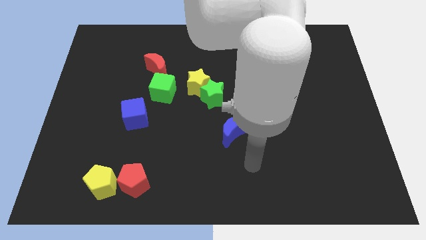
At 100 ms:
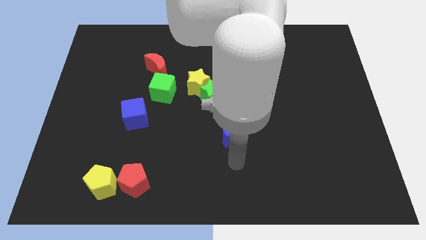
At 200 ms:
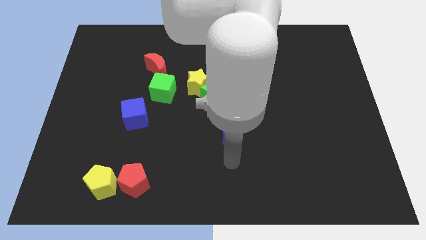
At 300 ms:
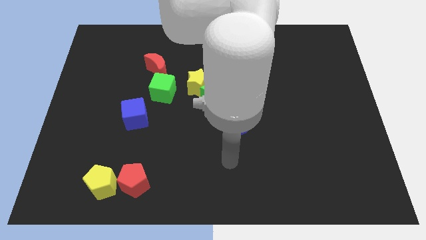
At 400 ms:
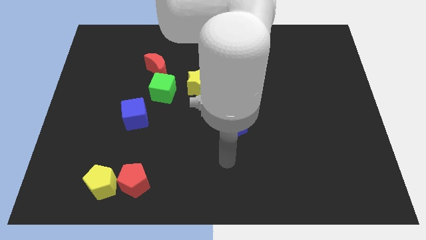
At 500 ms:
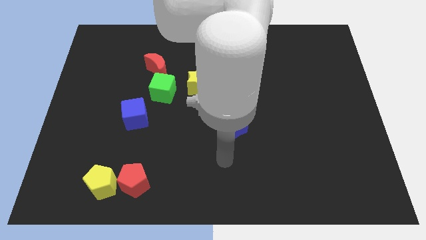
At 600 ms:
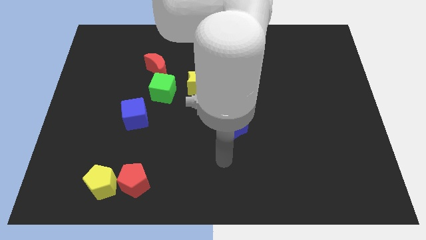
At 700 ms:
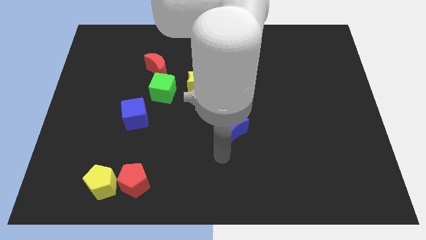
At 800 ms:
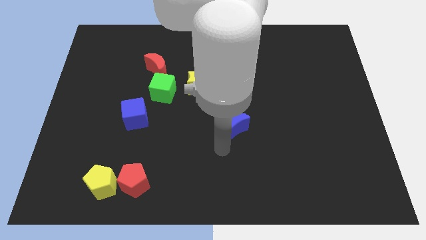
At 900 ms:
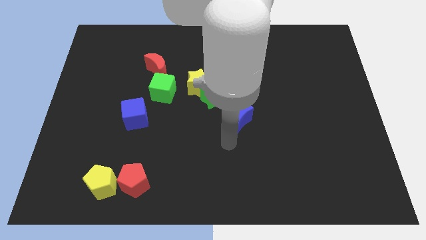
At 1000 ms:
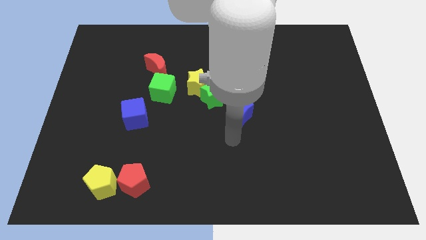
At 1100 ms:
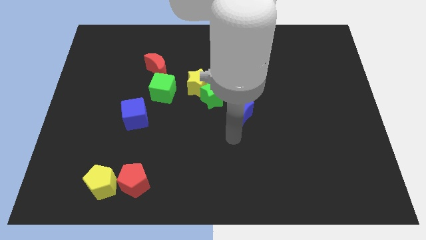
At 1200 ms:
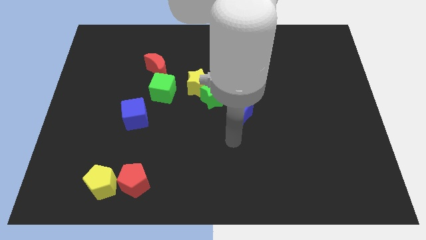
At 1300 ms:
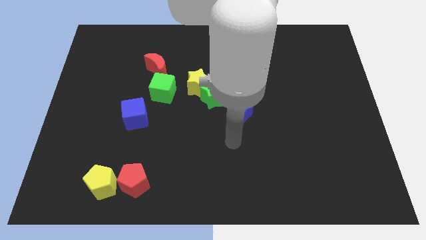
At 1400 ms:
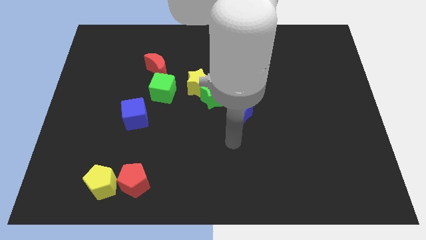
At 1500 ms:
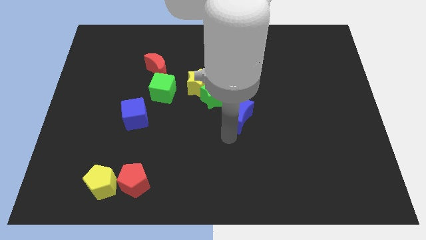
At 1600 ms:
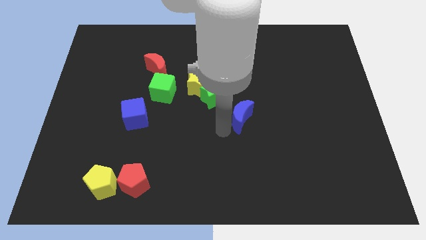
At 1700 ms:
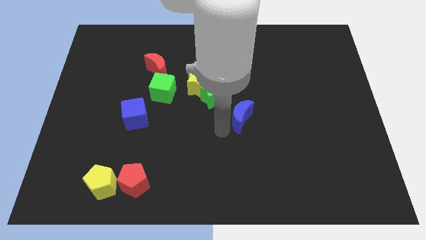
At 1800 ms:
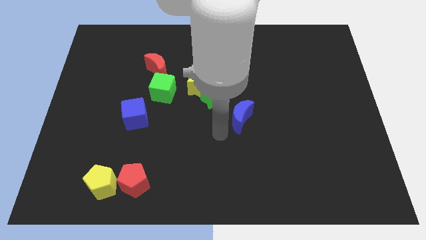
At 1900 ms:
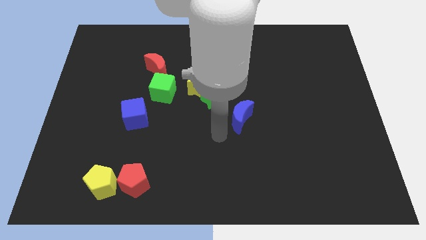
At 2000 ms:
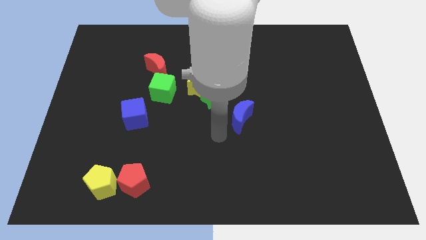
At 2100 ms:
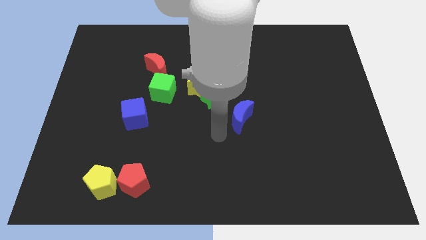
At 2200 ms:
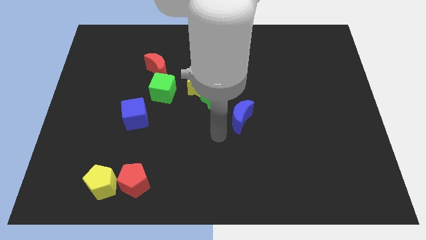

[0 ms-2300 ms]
push the blue moon to the center

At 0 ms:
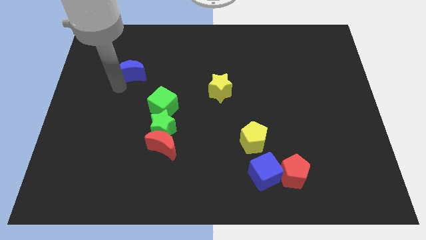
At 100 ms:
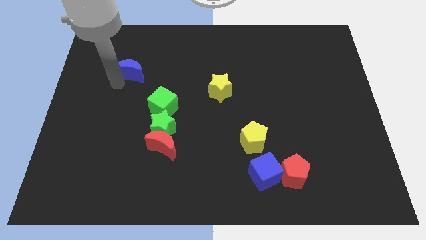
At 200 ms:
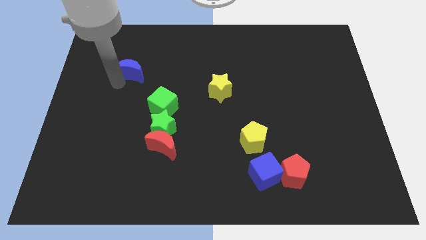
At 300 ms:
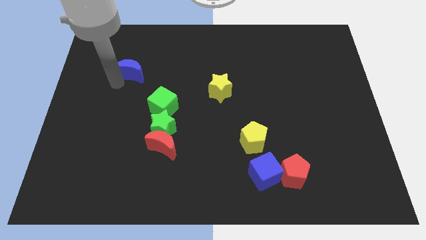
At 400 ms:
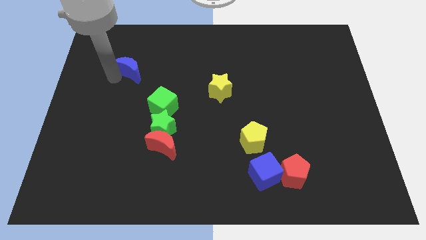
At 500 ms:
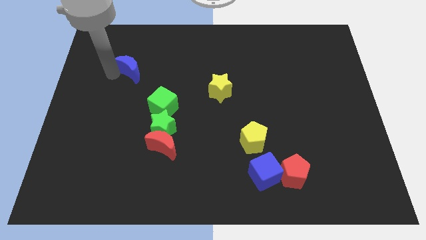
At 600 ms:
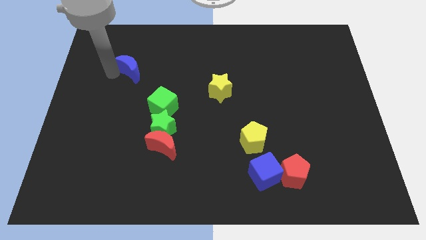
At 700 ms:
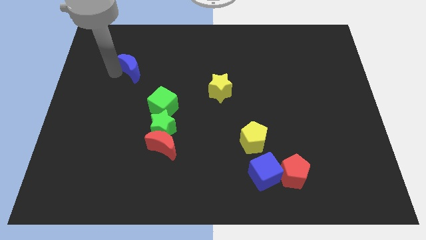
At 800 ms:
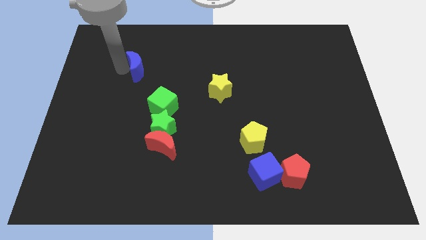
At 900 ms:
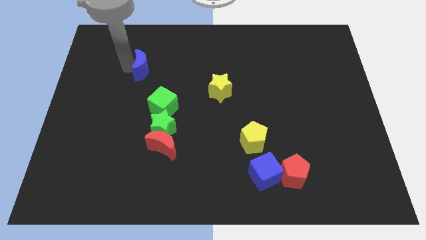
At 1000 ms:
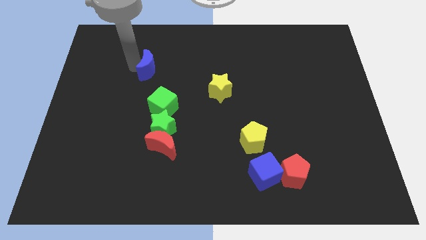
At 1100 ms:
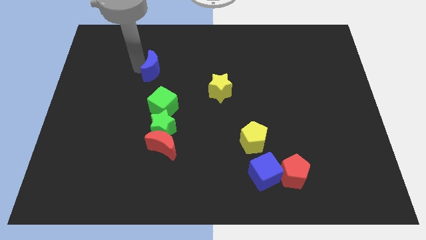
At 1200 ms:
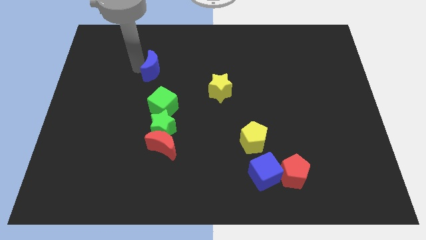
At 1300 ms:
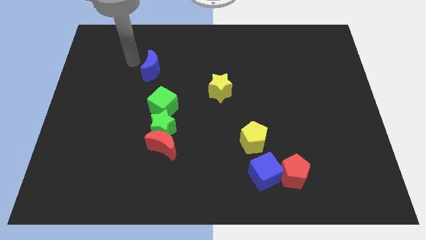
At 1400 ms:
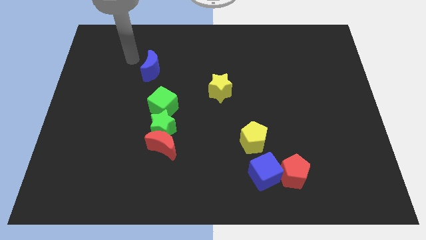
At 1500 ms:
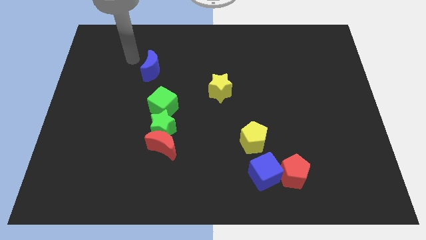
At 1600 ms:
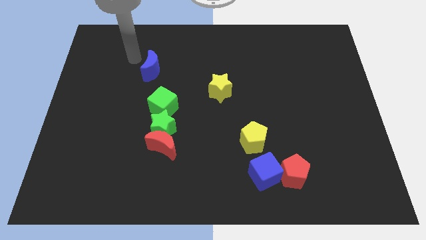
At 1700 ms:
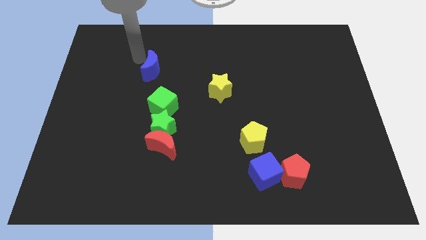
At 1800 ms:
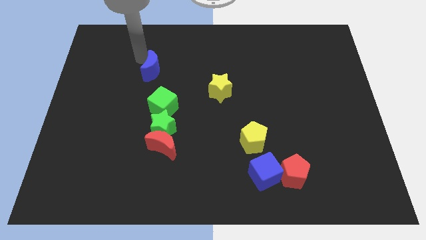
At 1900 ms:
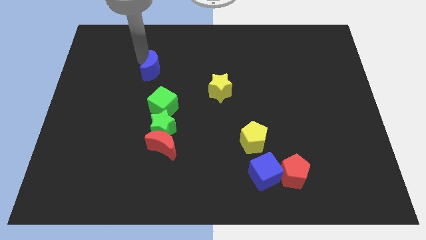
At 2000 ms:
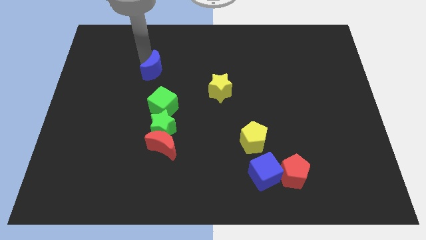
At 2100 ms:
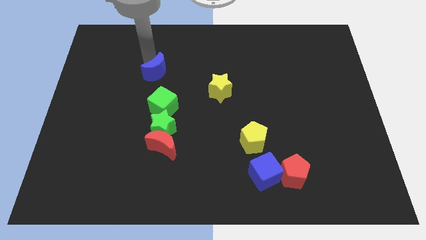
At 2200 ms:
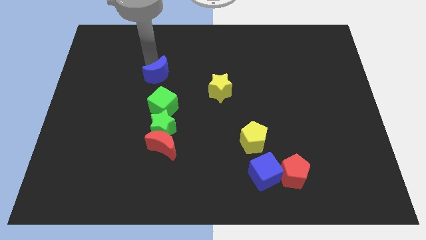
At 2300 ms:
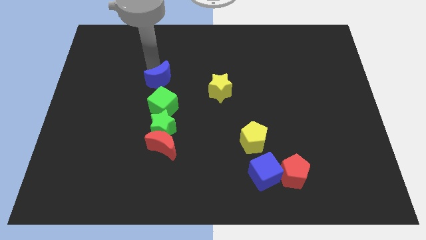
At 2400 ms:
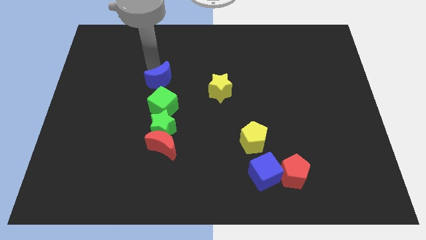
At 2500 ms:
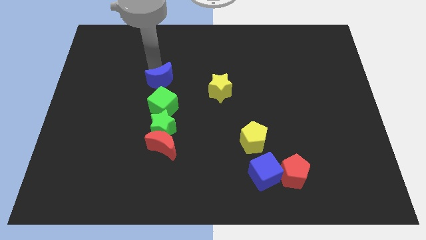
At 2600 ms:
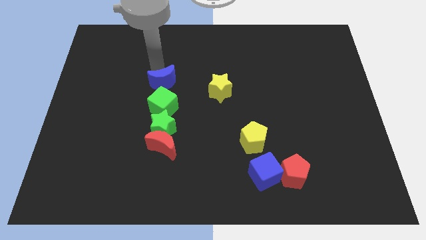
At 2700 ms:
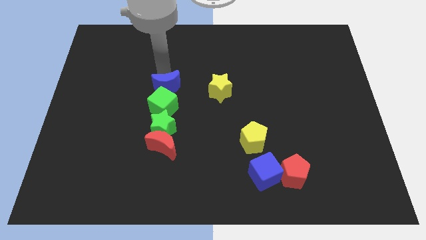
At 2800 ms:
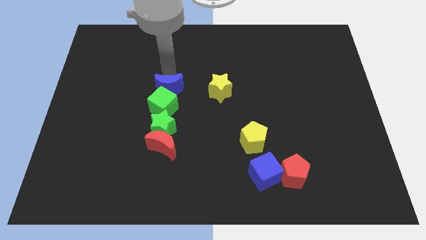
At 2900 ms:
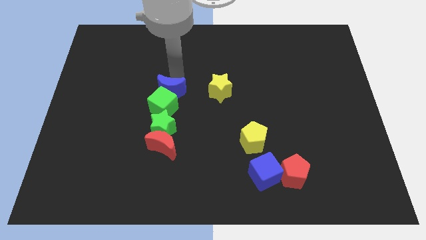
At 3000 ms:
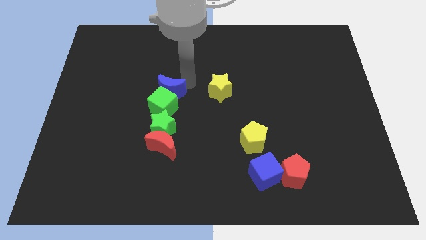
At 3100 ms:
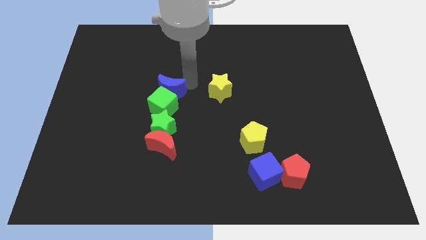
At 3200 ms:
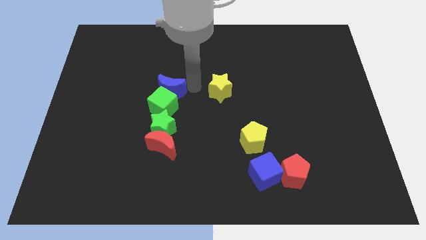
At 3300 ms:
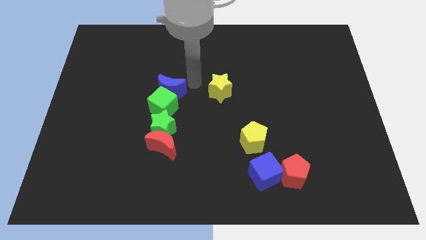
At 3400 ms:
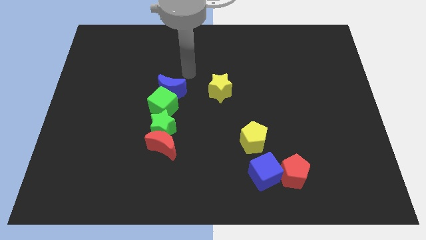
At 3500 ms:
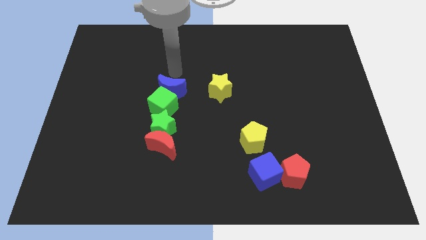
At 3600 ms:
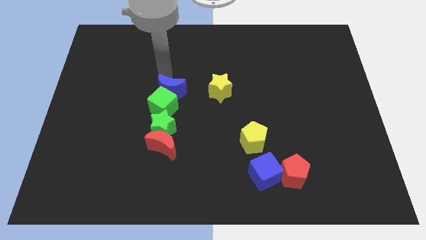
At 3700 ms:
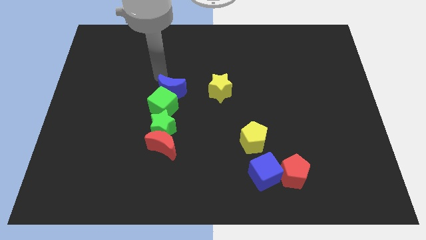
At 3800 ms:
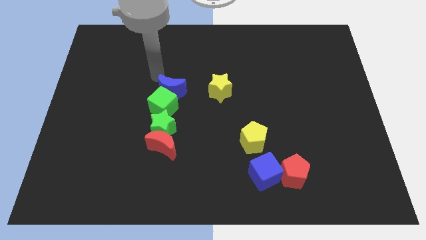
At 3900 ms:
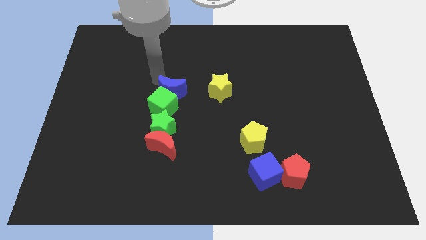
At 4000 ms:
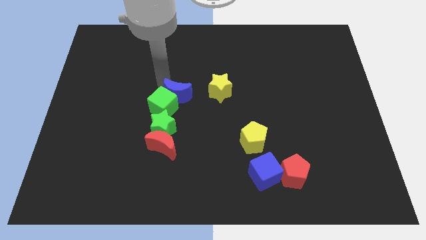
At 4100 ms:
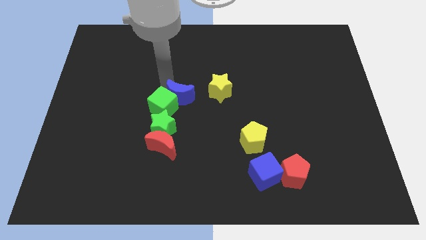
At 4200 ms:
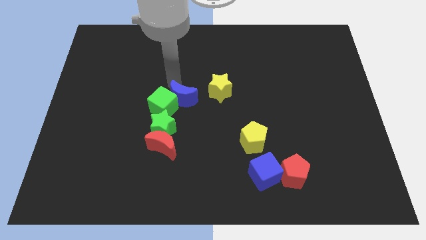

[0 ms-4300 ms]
push the blue crescent into the green cube

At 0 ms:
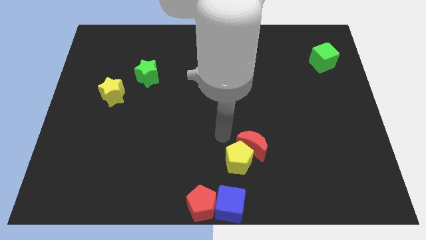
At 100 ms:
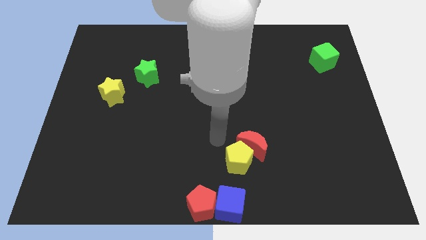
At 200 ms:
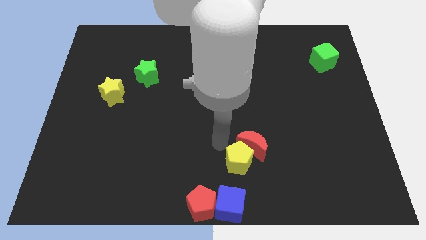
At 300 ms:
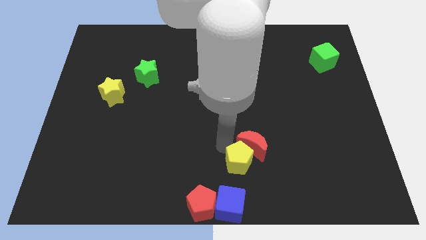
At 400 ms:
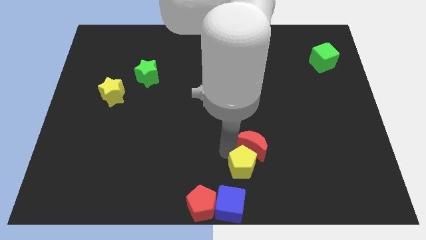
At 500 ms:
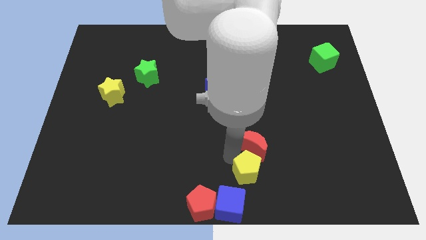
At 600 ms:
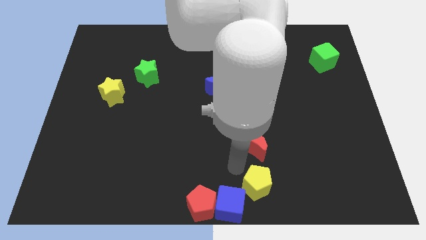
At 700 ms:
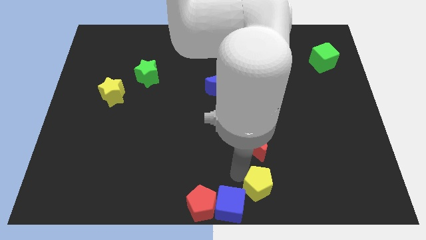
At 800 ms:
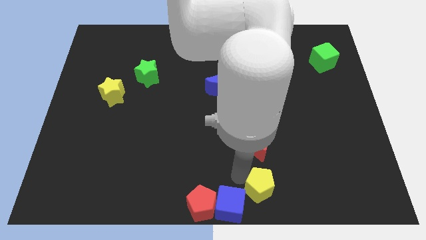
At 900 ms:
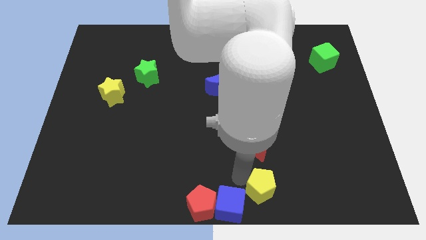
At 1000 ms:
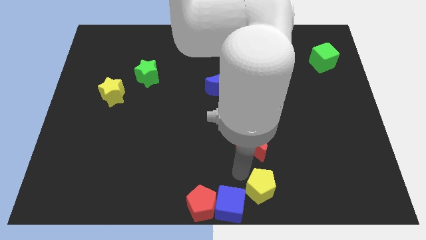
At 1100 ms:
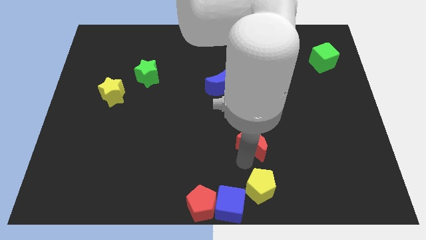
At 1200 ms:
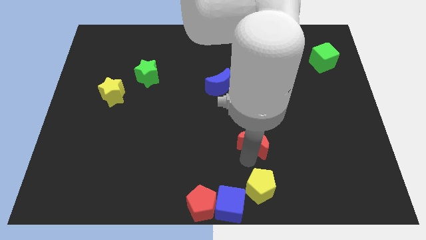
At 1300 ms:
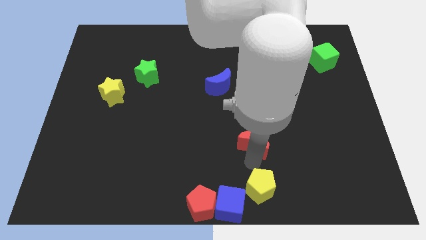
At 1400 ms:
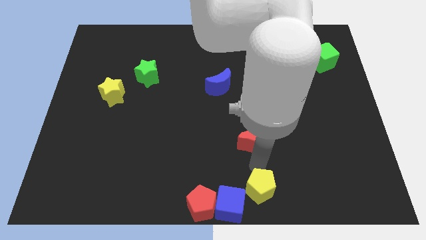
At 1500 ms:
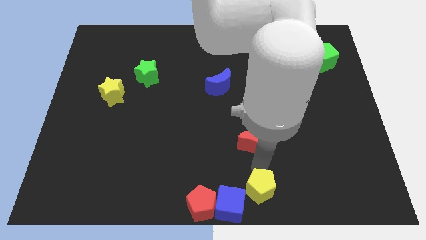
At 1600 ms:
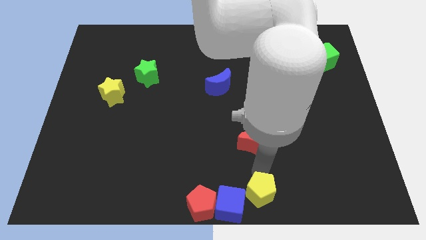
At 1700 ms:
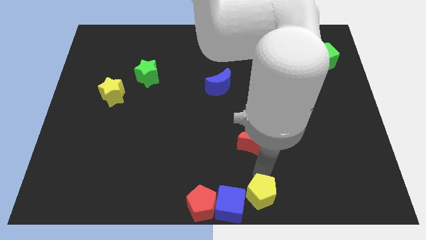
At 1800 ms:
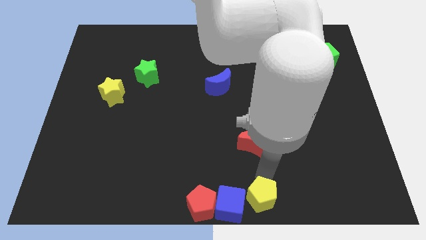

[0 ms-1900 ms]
separate the yellow pentagon from the red moon

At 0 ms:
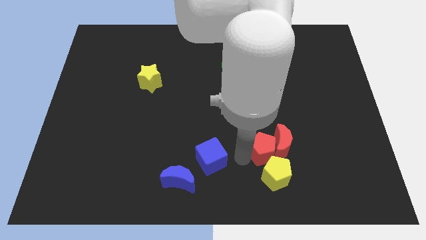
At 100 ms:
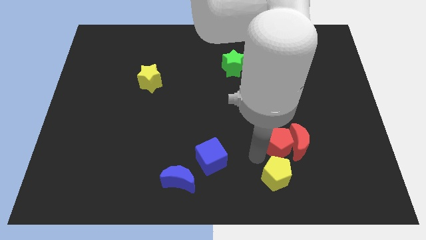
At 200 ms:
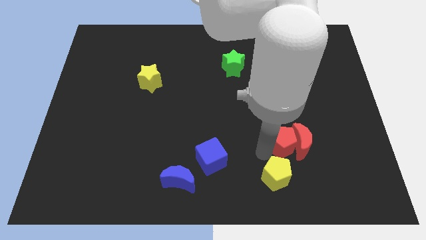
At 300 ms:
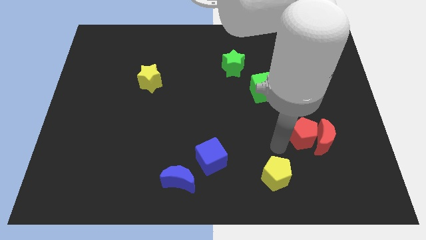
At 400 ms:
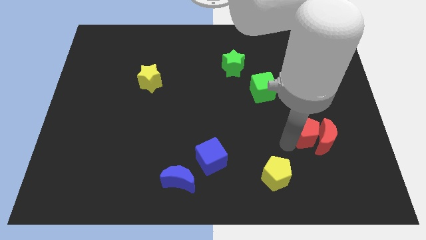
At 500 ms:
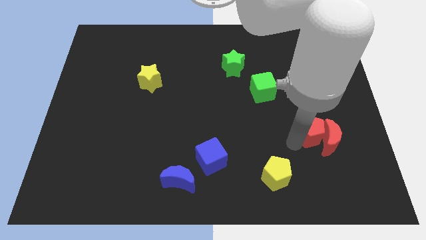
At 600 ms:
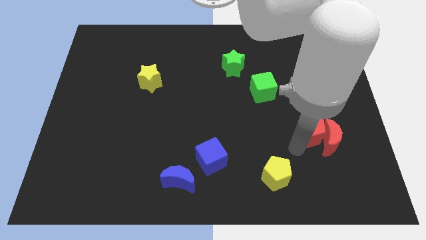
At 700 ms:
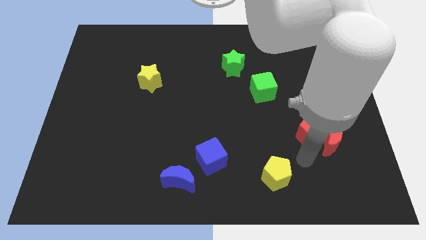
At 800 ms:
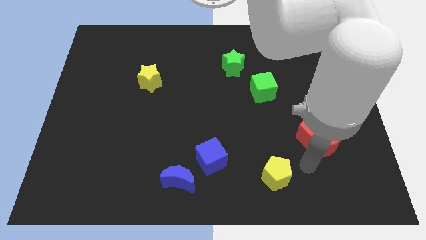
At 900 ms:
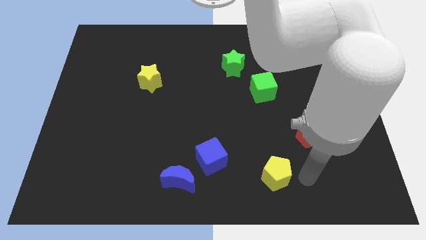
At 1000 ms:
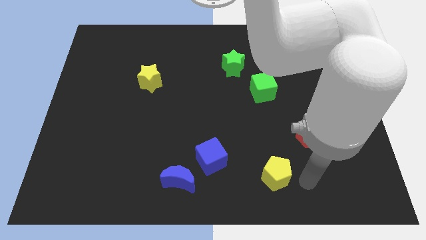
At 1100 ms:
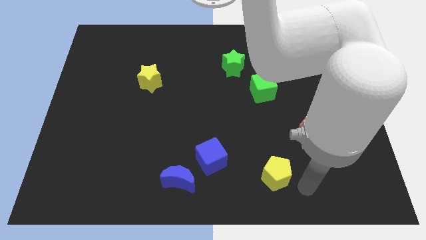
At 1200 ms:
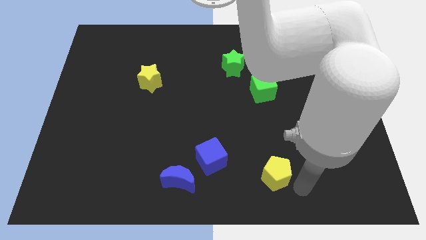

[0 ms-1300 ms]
push the red pentagon with the red crescent towards the right bottom of the board
